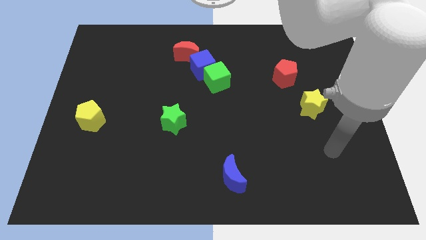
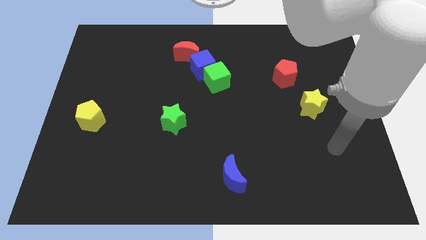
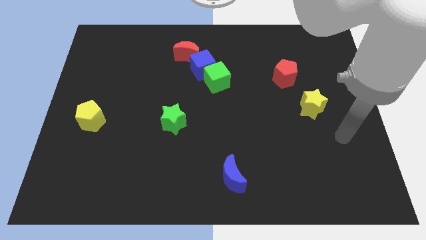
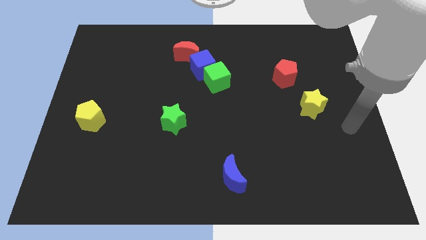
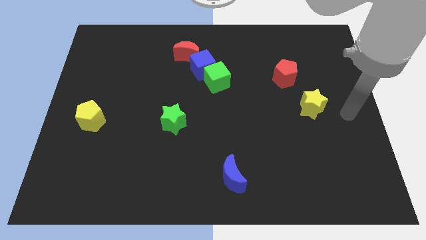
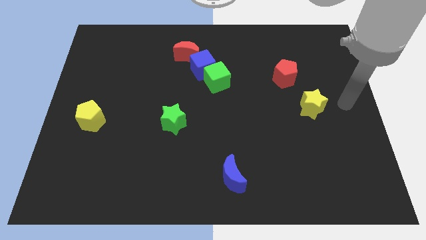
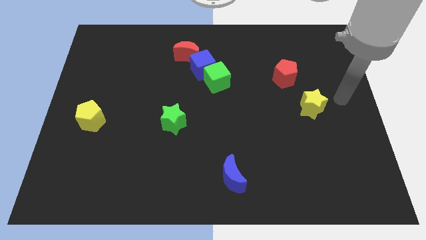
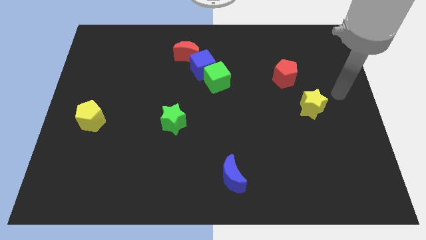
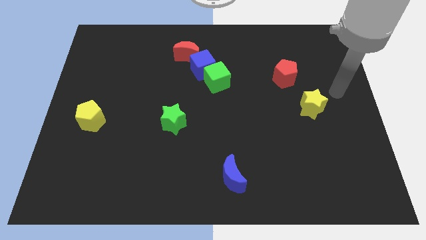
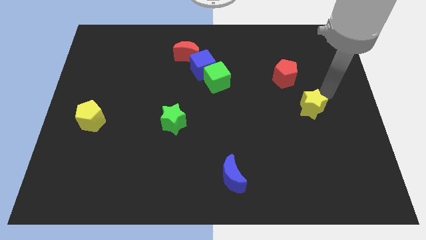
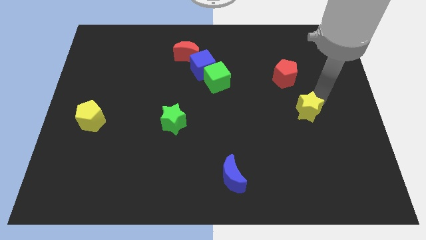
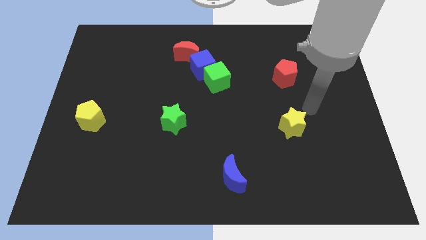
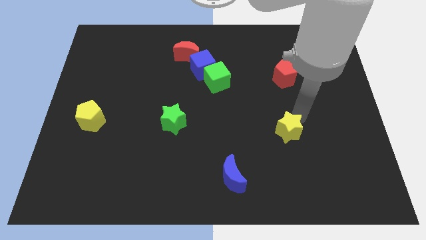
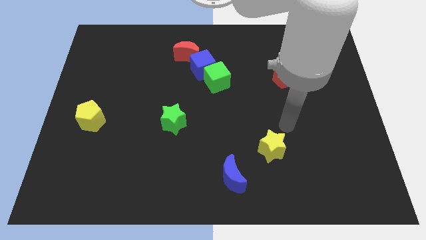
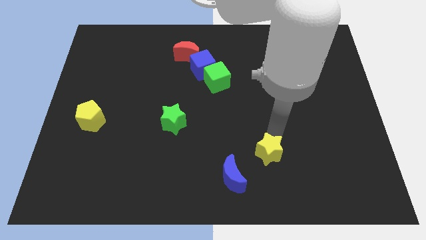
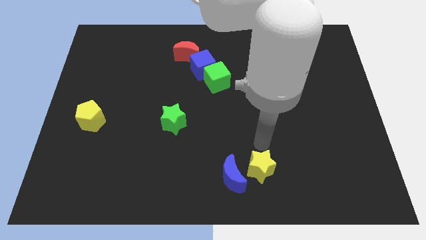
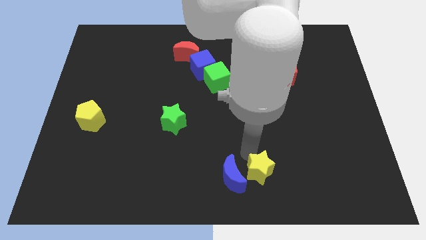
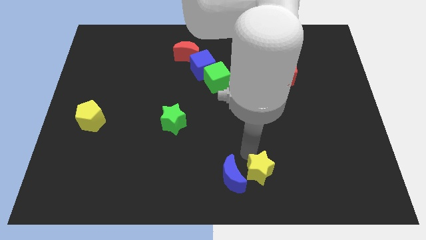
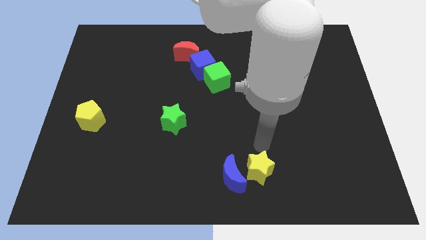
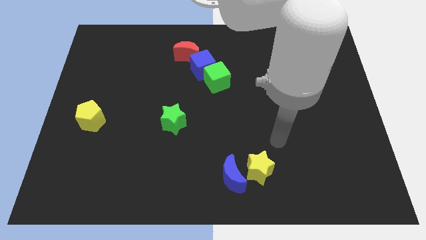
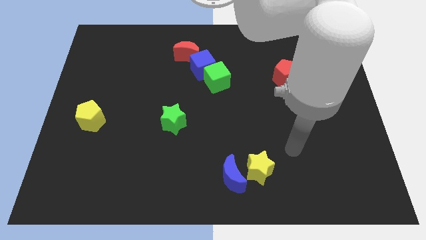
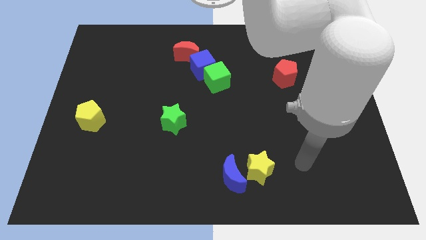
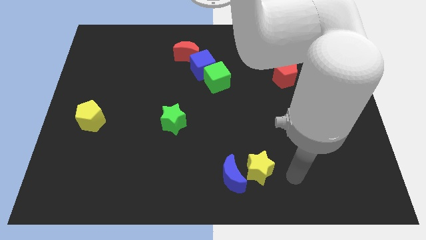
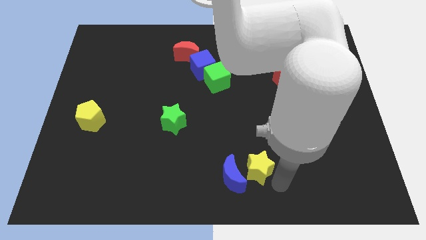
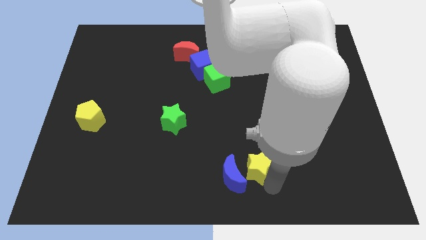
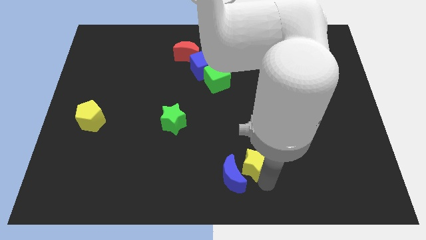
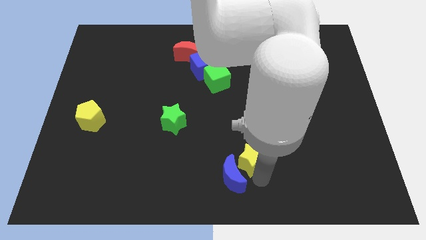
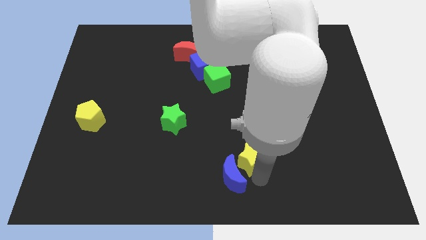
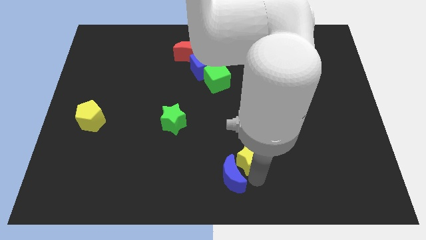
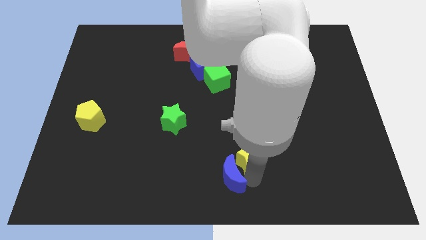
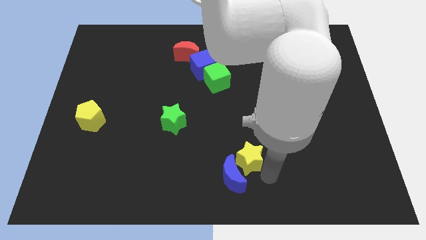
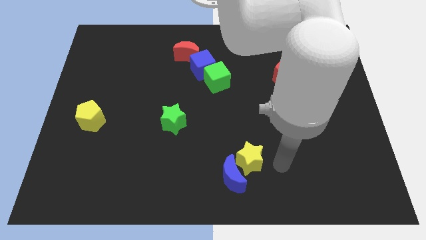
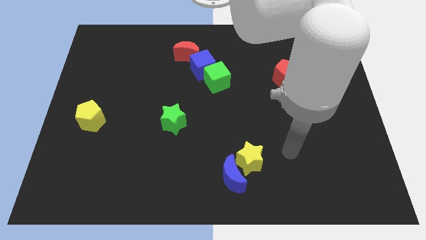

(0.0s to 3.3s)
put the yellow star and blue semi circle together

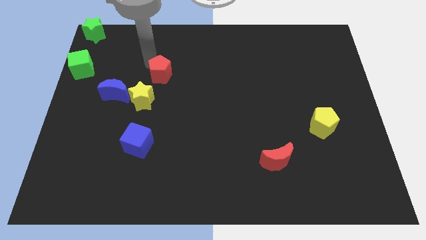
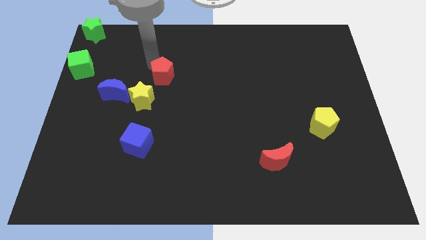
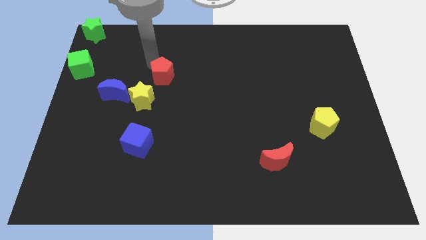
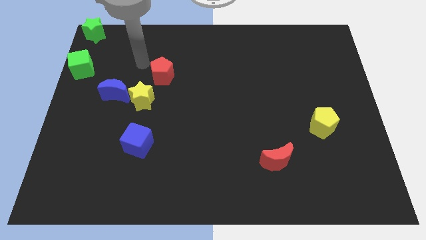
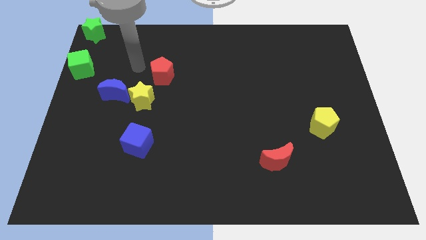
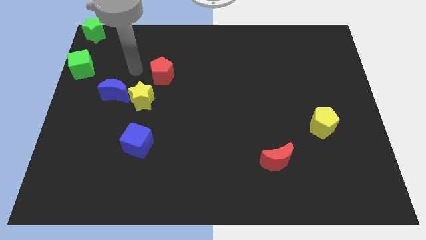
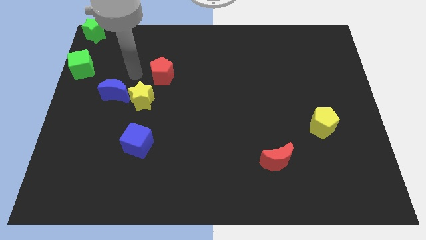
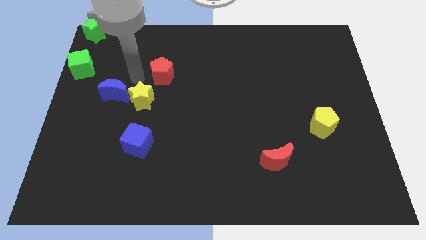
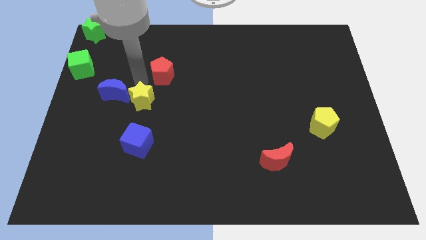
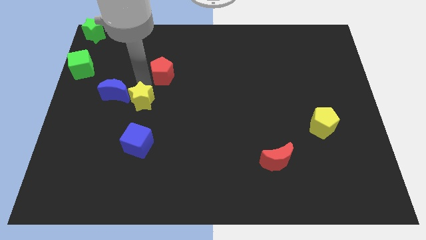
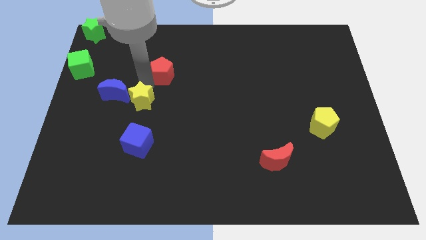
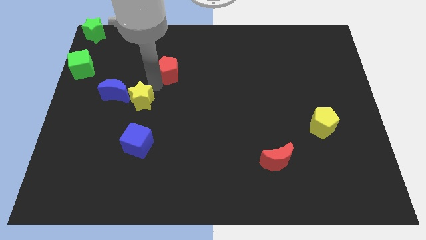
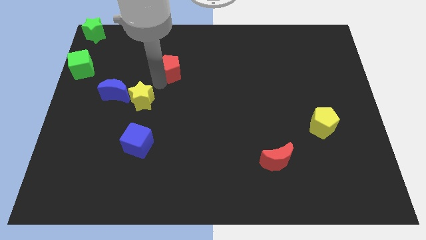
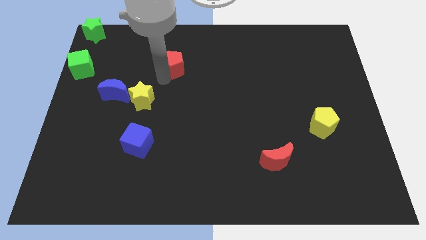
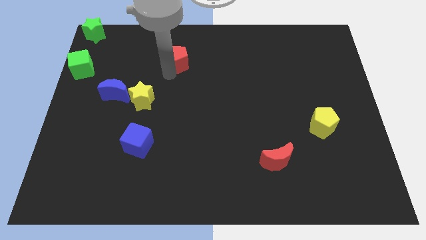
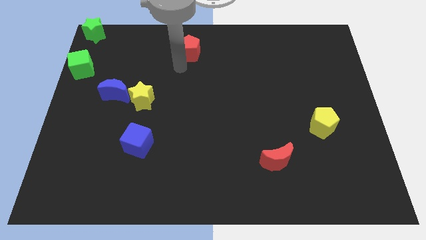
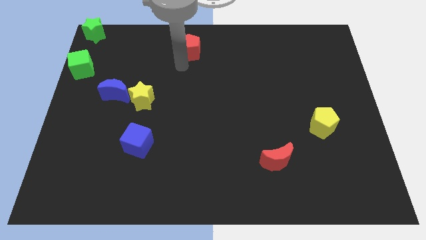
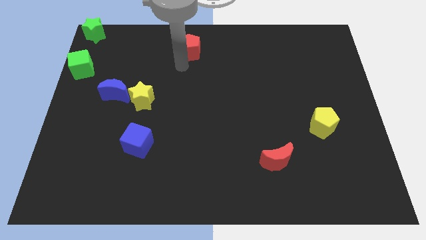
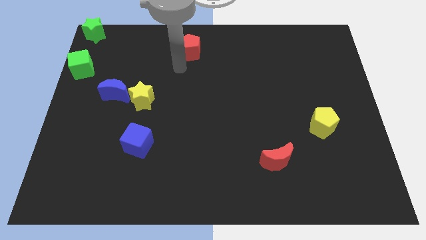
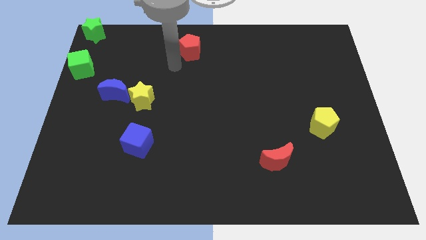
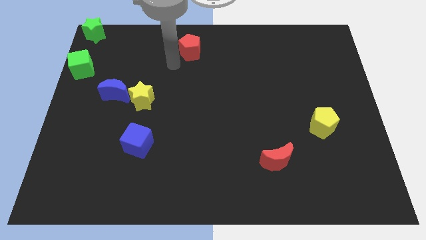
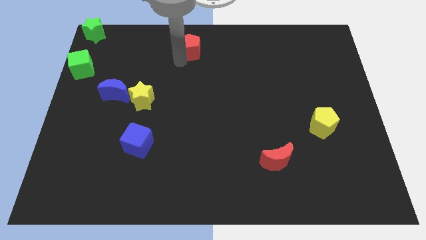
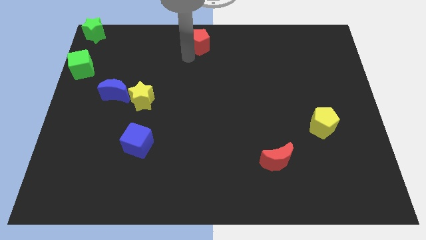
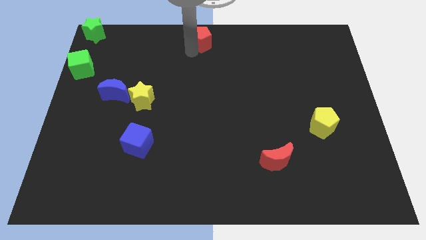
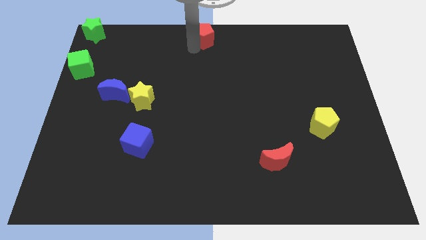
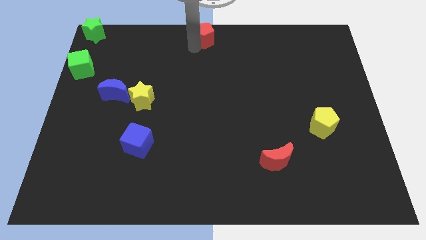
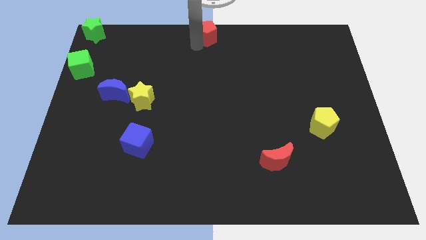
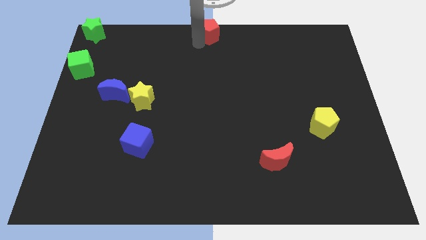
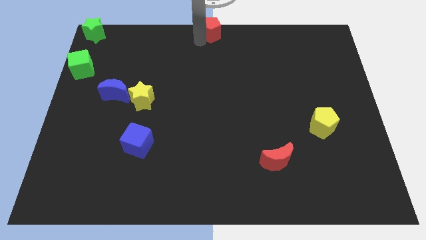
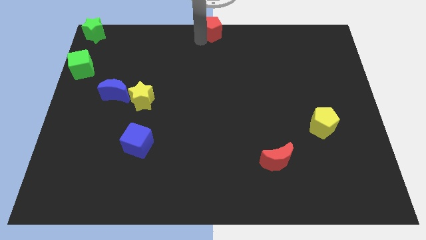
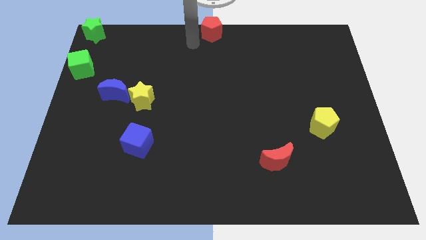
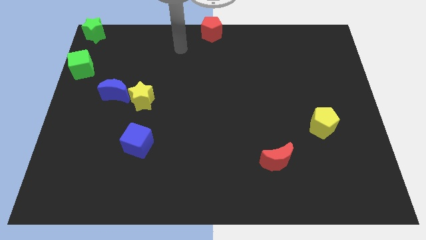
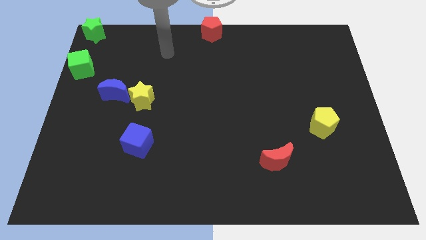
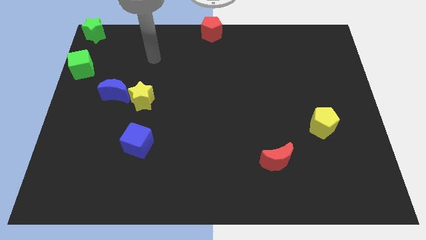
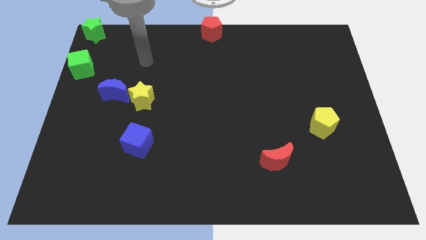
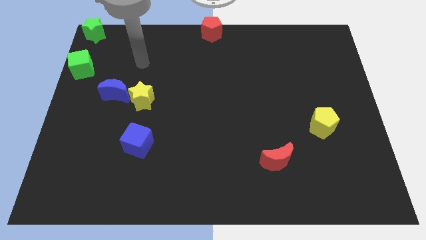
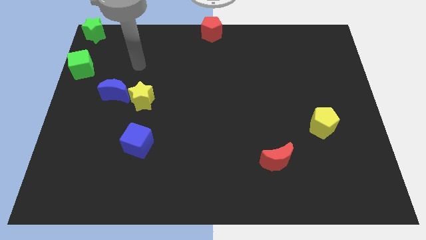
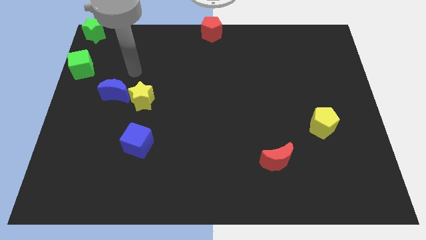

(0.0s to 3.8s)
put the red pentagon at the top center of the board

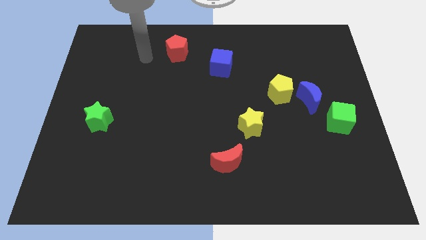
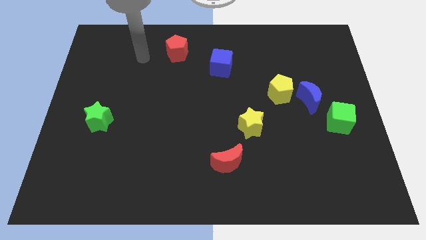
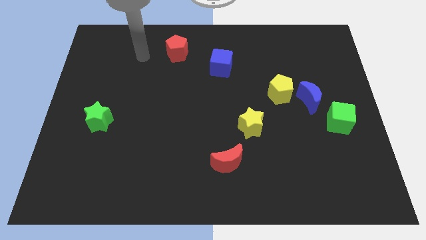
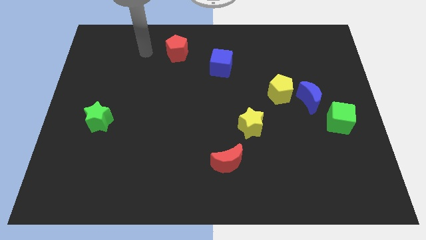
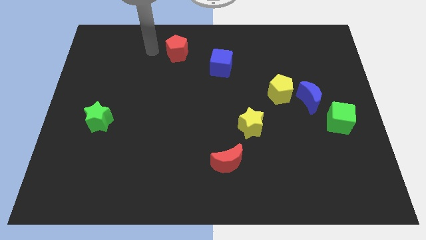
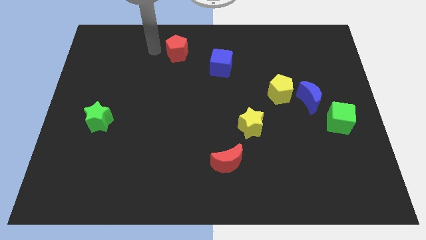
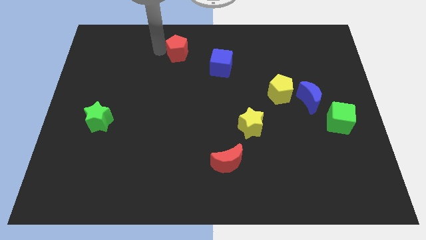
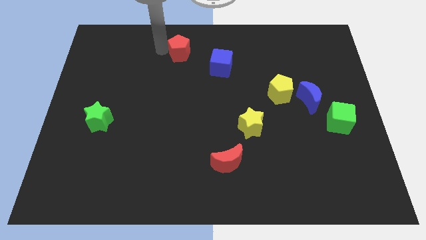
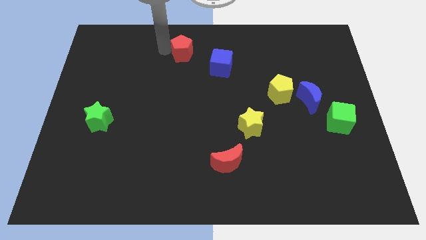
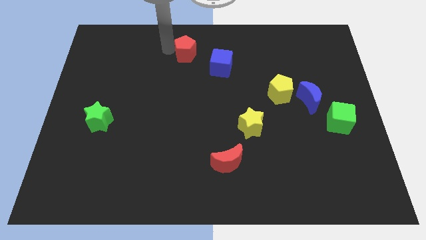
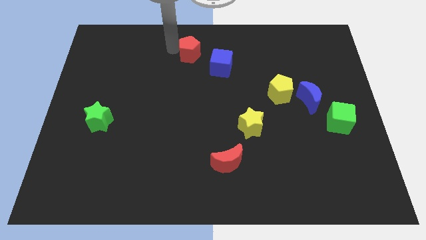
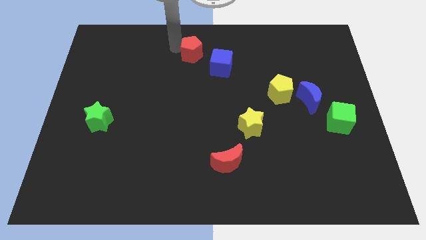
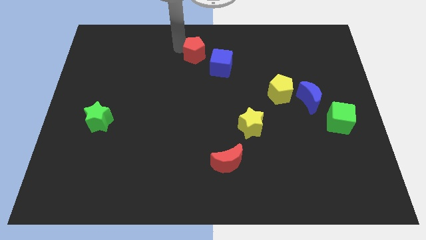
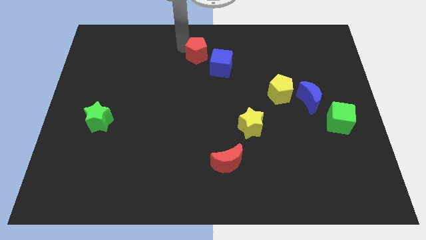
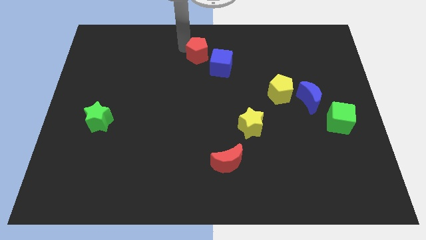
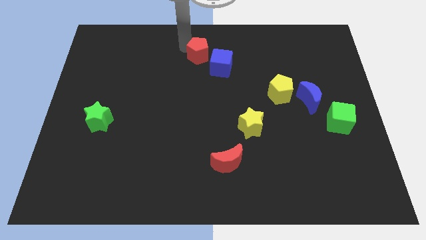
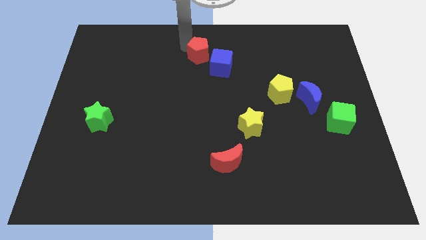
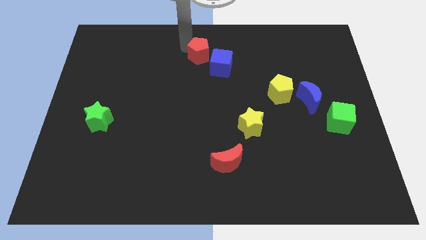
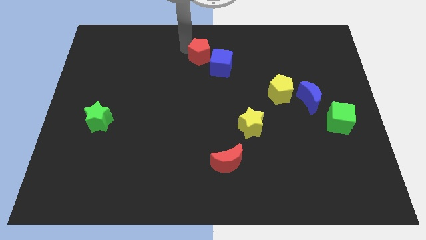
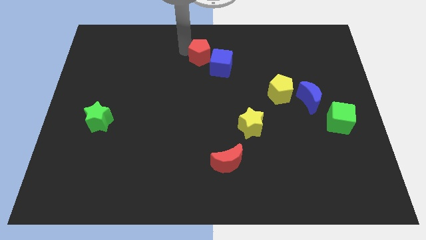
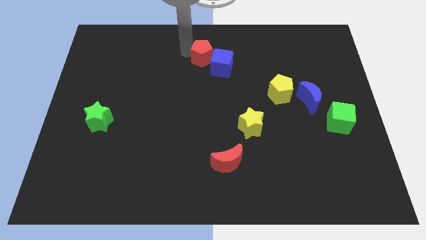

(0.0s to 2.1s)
move red pentagon into blue cube
